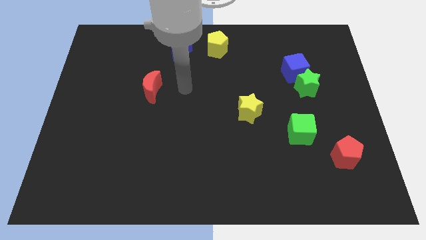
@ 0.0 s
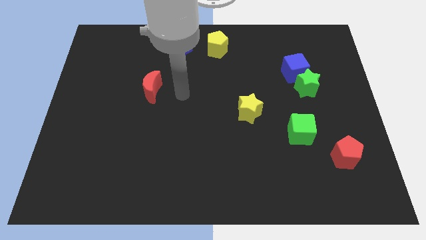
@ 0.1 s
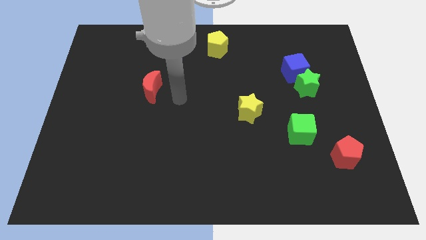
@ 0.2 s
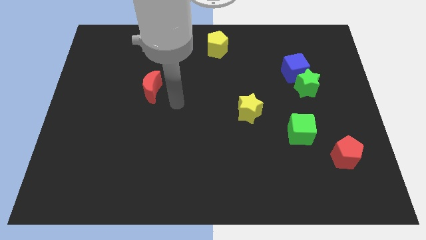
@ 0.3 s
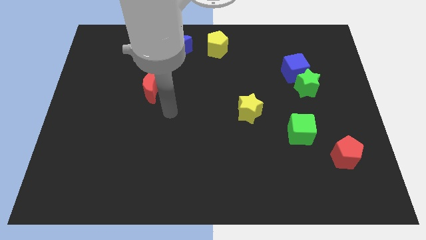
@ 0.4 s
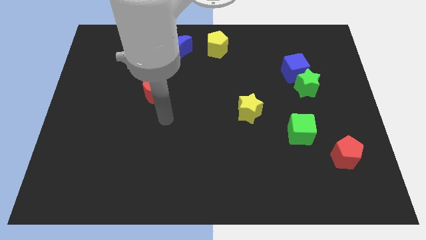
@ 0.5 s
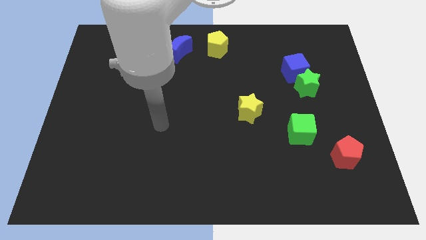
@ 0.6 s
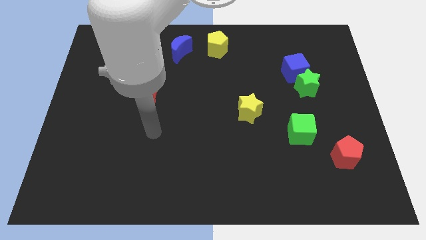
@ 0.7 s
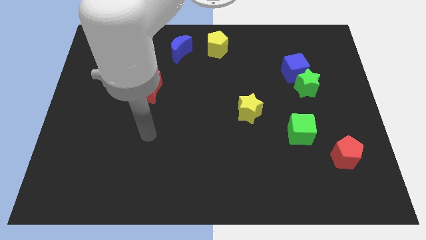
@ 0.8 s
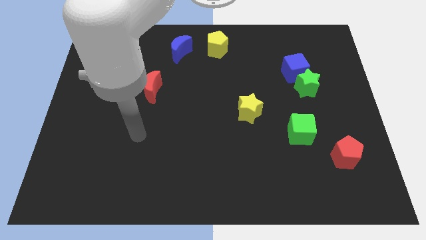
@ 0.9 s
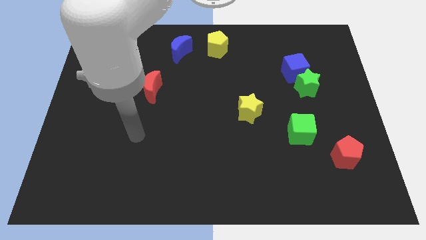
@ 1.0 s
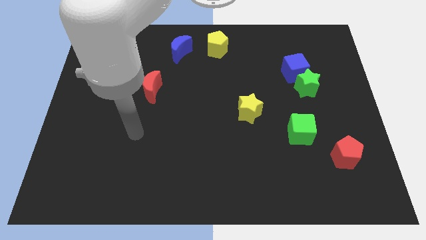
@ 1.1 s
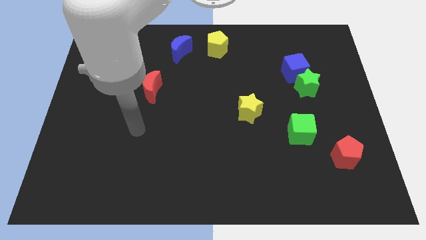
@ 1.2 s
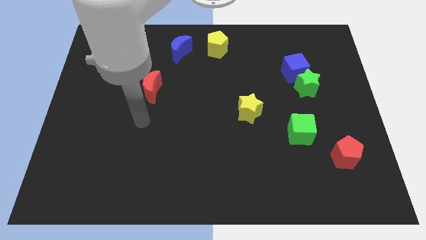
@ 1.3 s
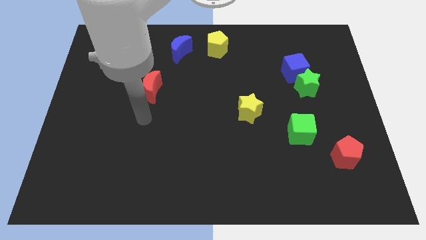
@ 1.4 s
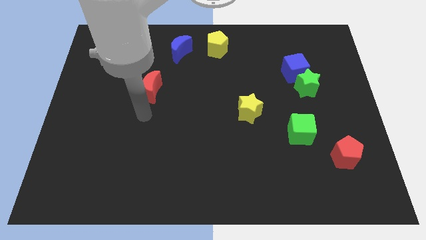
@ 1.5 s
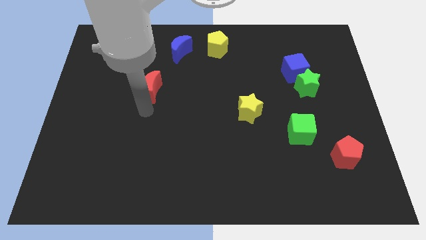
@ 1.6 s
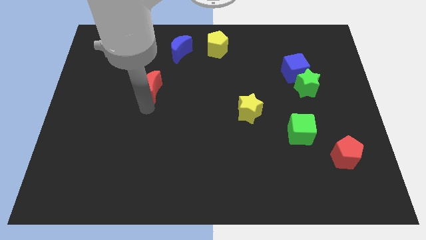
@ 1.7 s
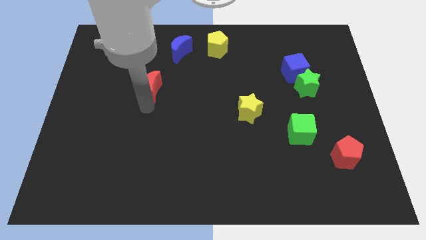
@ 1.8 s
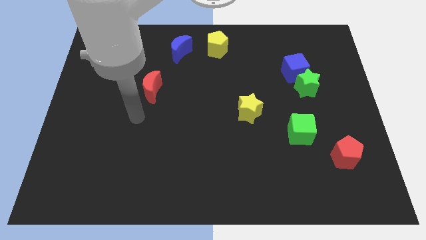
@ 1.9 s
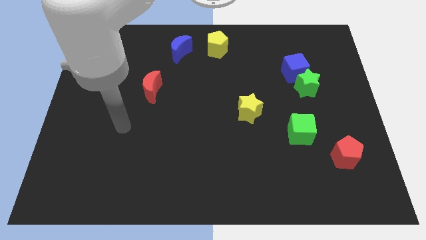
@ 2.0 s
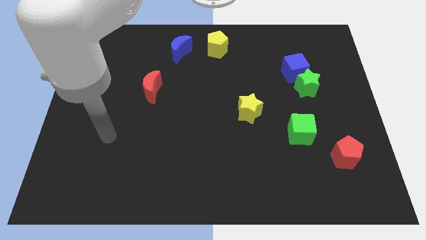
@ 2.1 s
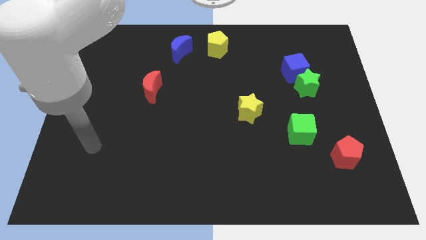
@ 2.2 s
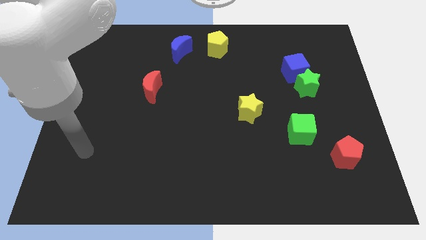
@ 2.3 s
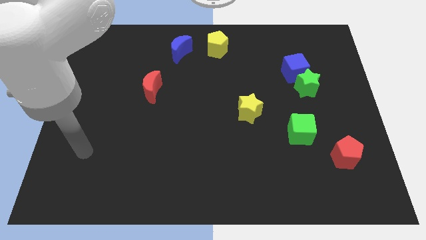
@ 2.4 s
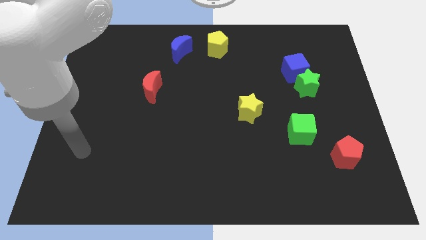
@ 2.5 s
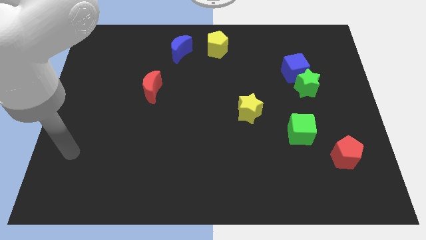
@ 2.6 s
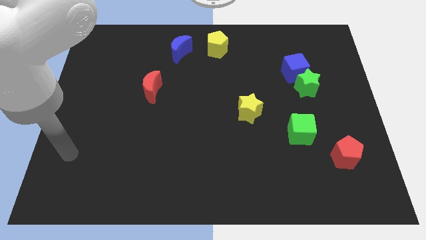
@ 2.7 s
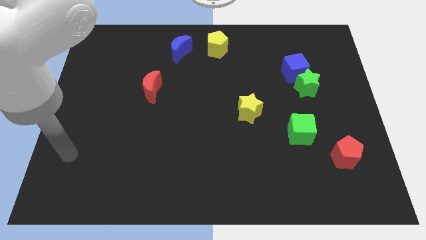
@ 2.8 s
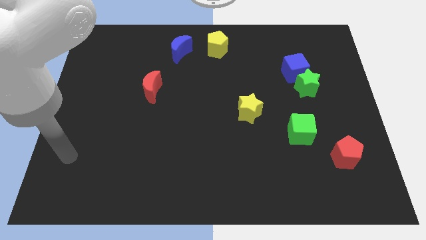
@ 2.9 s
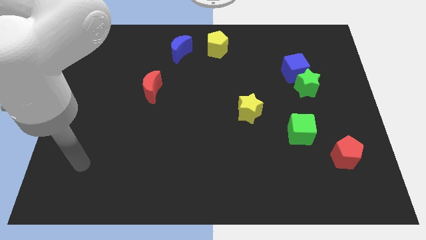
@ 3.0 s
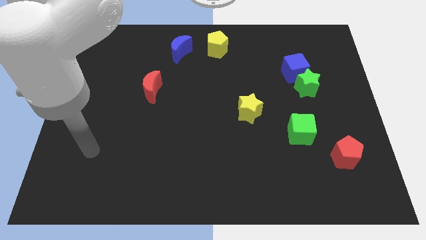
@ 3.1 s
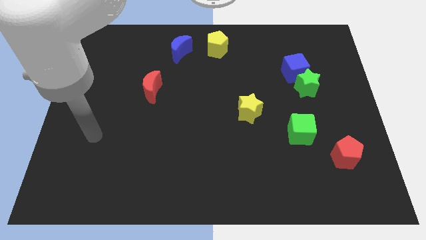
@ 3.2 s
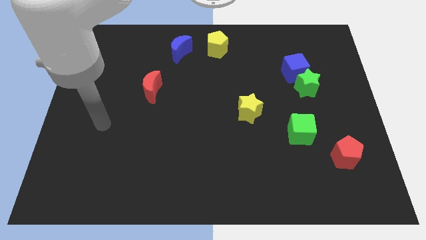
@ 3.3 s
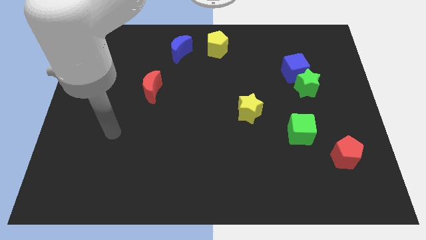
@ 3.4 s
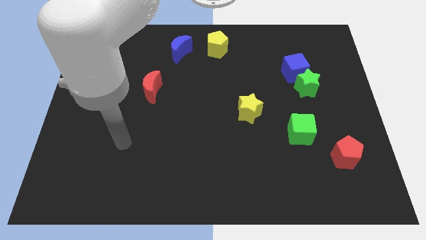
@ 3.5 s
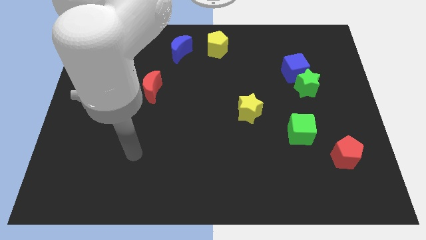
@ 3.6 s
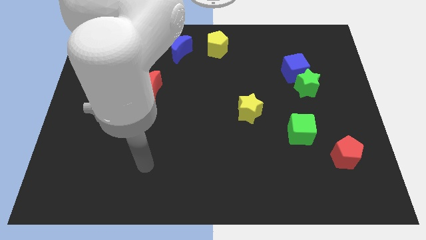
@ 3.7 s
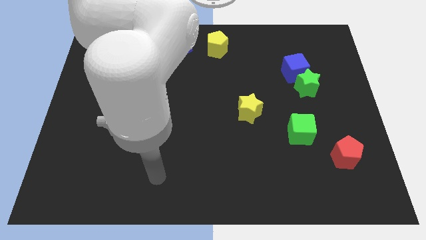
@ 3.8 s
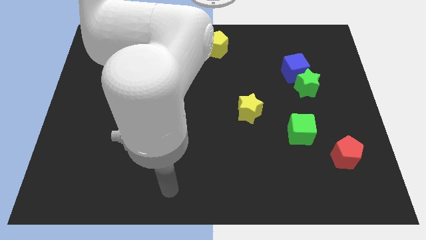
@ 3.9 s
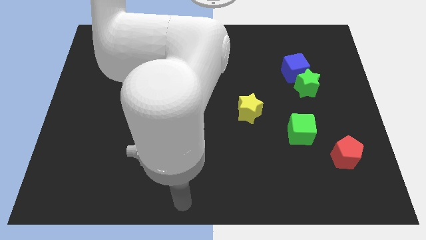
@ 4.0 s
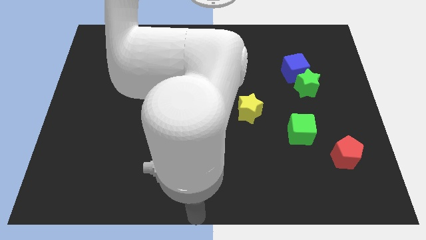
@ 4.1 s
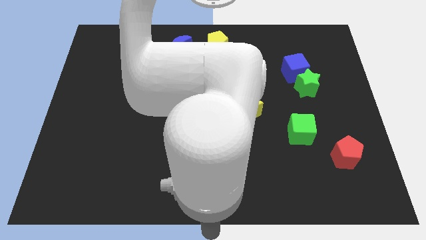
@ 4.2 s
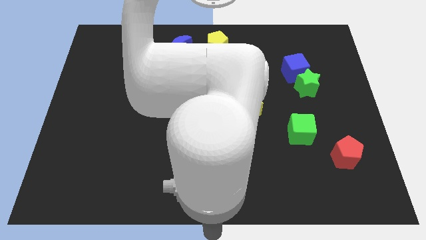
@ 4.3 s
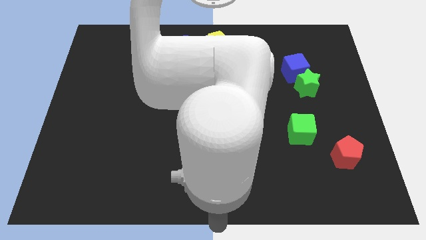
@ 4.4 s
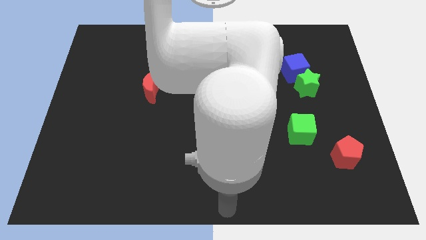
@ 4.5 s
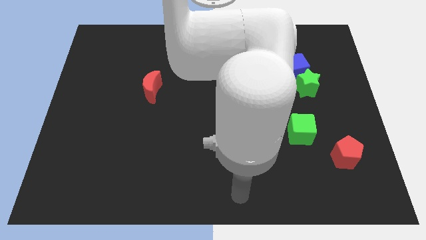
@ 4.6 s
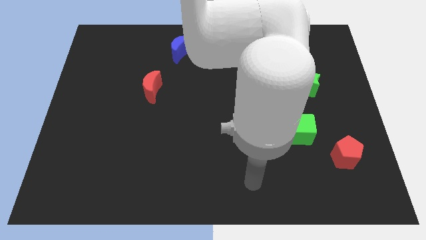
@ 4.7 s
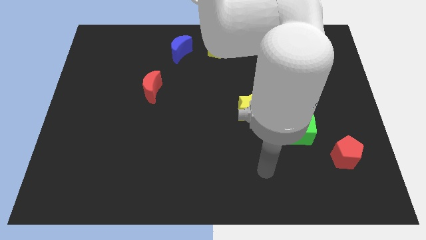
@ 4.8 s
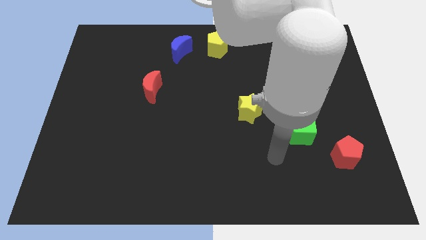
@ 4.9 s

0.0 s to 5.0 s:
move your arm from the red crescent to the green cube

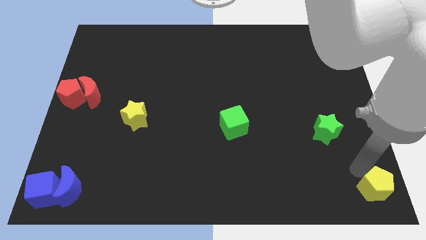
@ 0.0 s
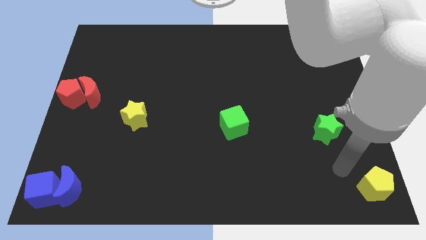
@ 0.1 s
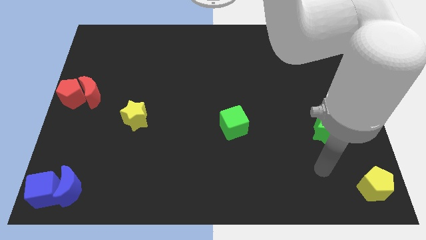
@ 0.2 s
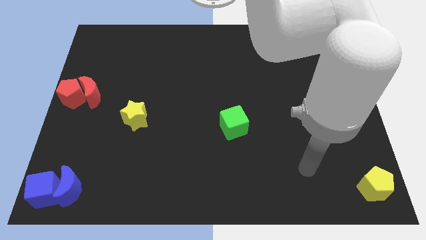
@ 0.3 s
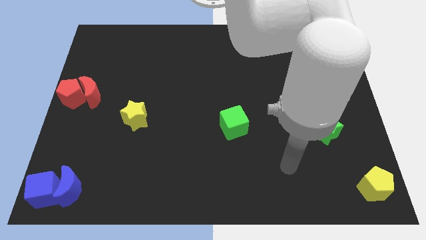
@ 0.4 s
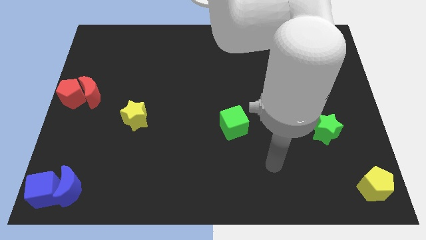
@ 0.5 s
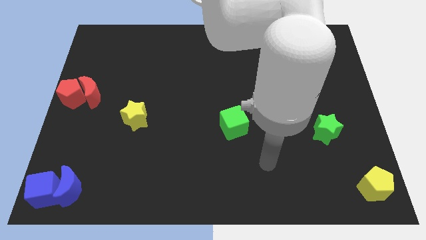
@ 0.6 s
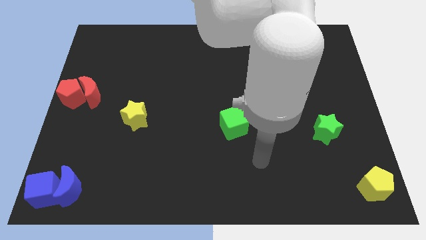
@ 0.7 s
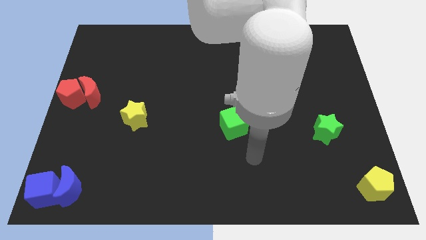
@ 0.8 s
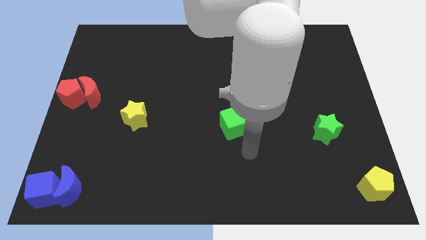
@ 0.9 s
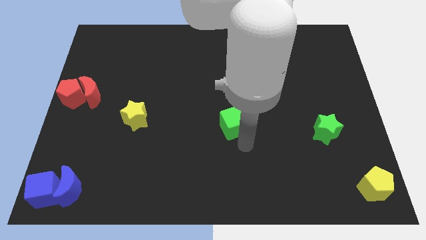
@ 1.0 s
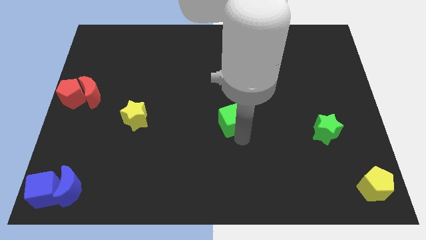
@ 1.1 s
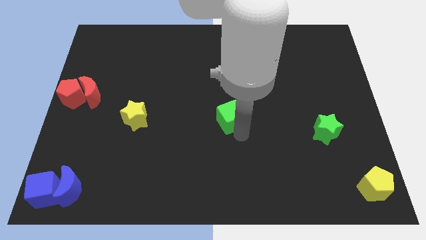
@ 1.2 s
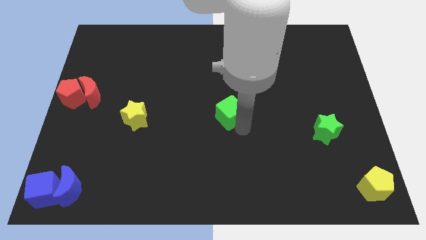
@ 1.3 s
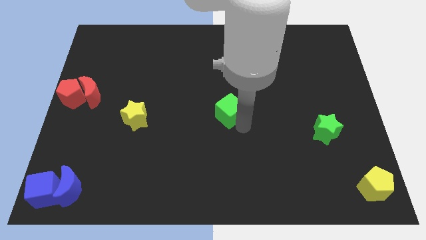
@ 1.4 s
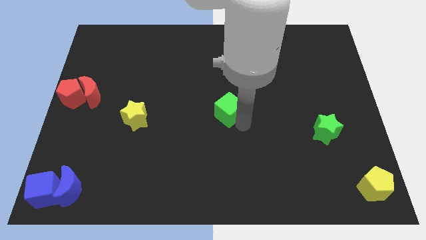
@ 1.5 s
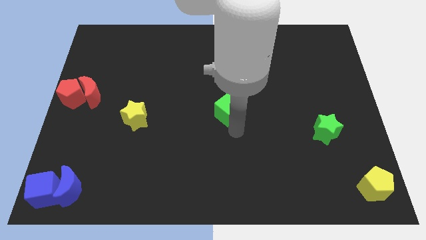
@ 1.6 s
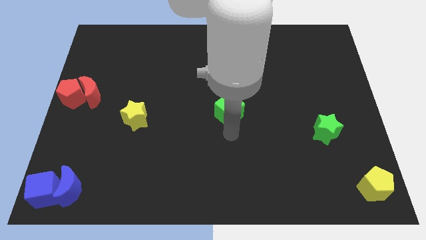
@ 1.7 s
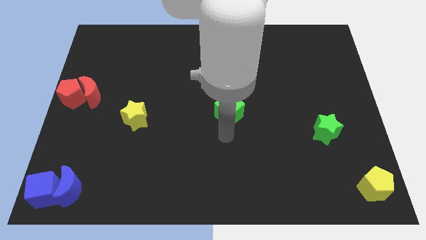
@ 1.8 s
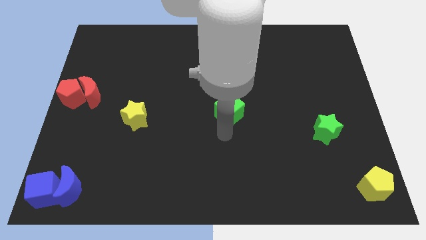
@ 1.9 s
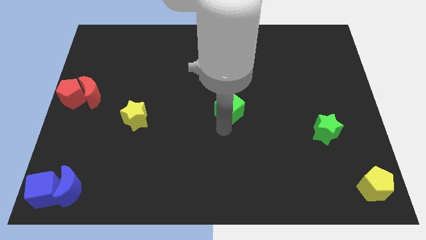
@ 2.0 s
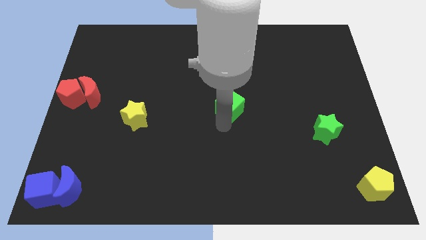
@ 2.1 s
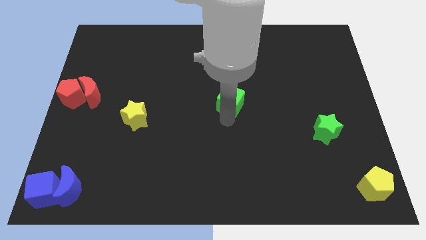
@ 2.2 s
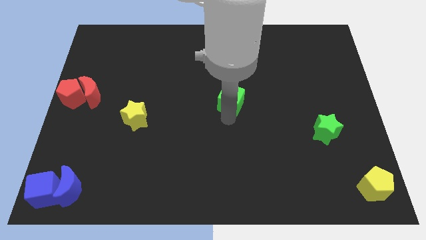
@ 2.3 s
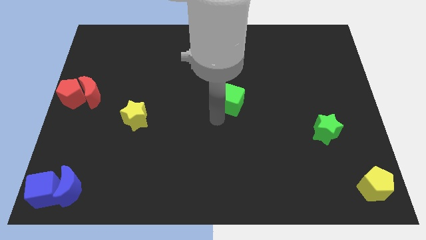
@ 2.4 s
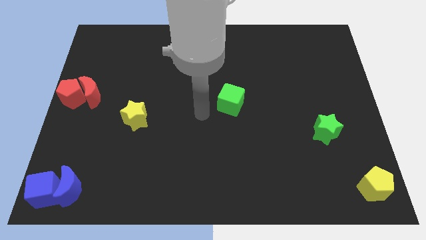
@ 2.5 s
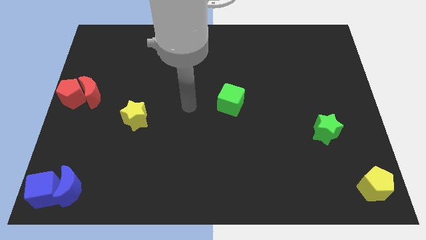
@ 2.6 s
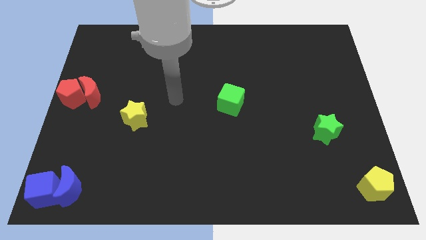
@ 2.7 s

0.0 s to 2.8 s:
slightly move the green cube up

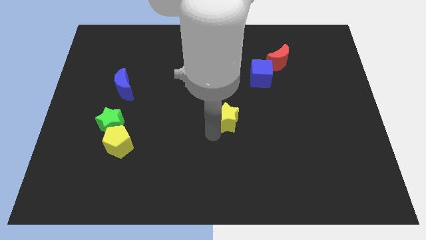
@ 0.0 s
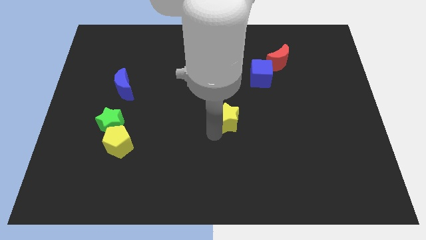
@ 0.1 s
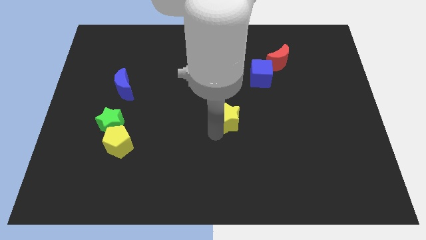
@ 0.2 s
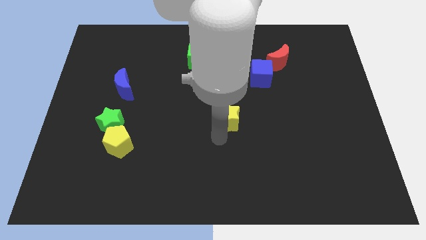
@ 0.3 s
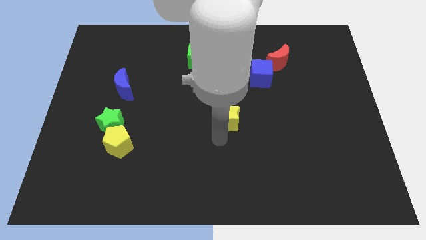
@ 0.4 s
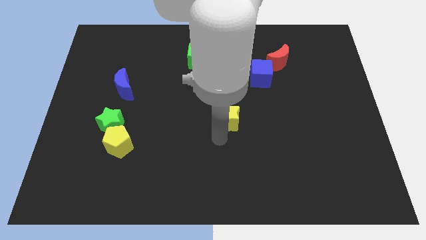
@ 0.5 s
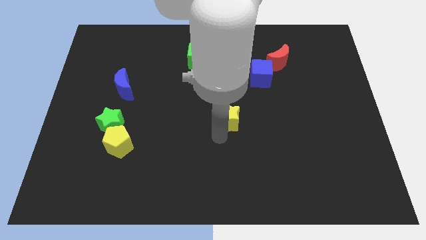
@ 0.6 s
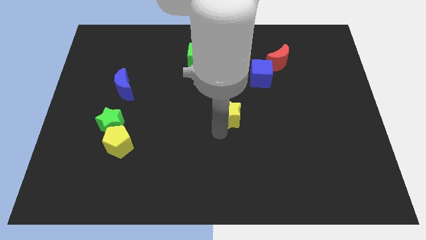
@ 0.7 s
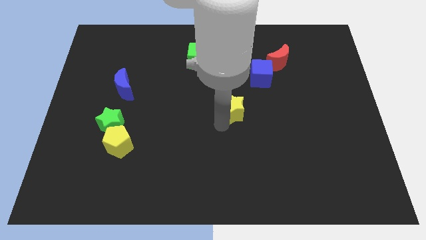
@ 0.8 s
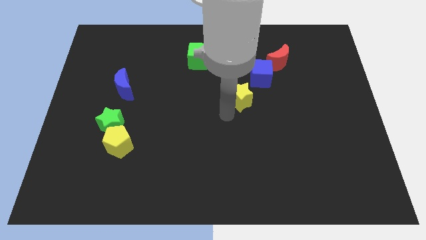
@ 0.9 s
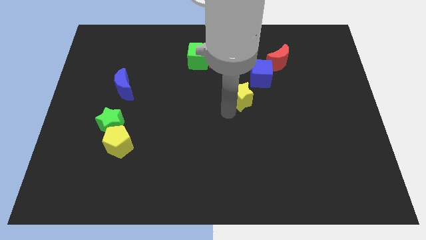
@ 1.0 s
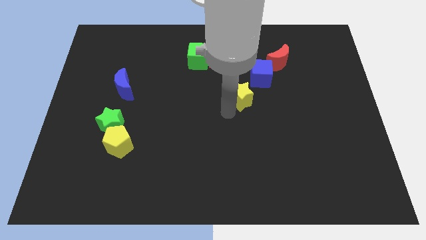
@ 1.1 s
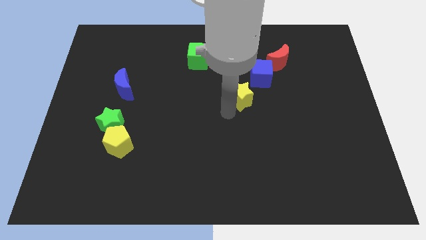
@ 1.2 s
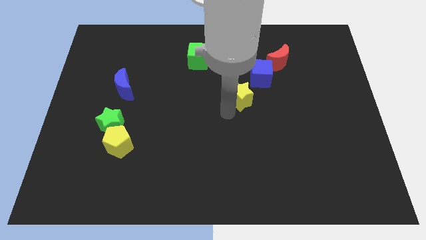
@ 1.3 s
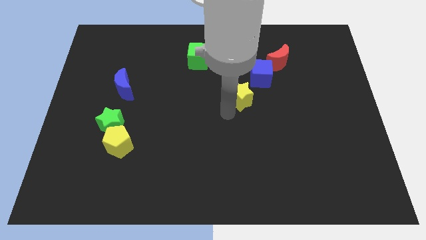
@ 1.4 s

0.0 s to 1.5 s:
move yellow star to the bottom left of the blue cube
